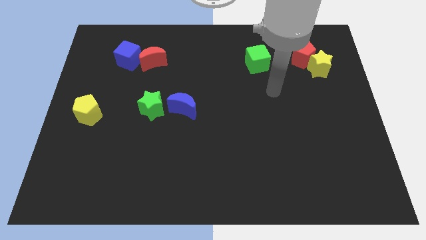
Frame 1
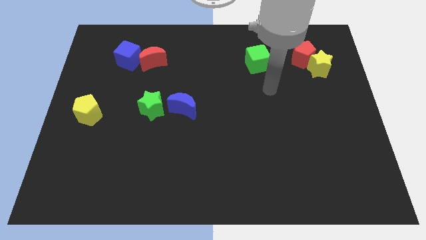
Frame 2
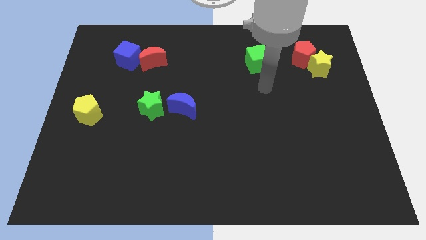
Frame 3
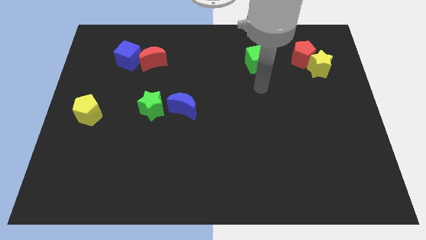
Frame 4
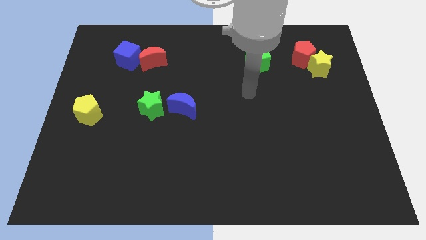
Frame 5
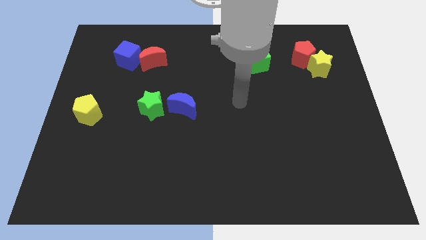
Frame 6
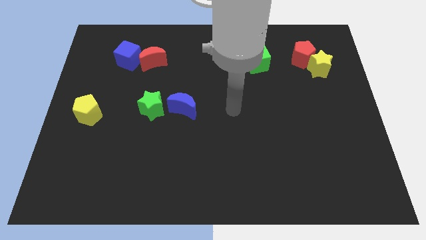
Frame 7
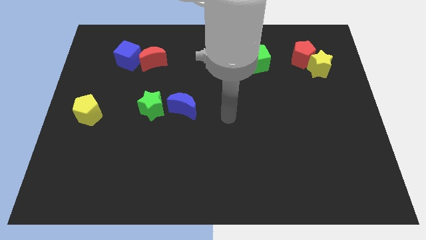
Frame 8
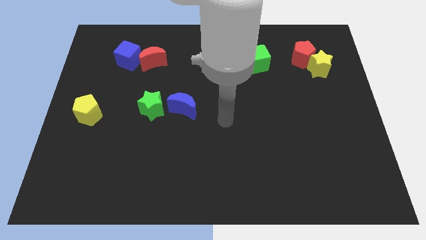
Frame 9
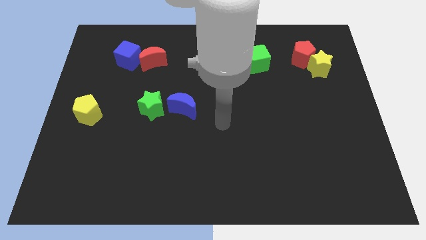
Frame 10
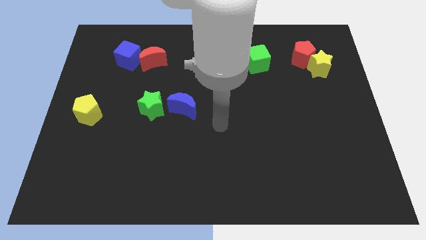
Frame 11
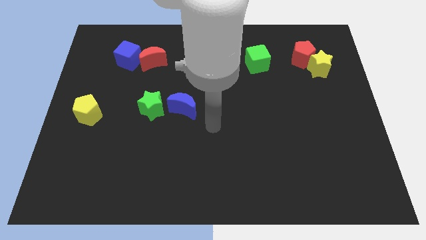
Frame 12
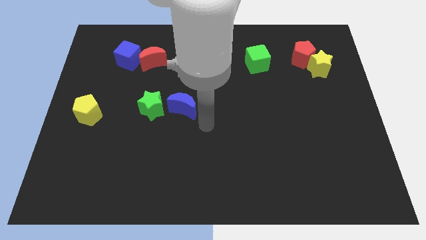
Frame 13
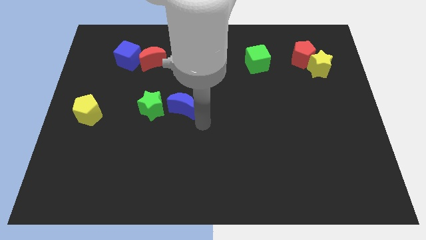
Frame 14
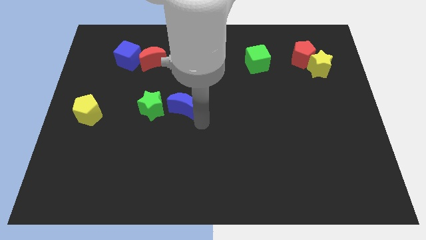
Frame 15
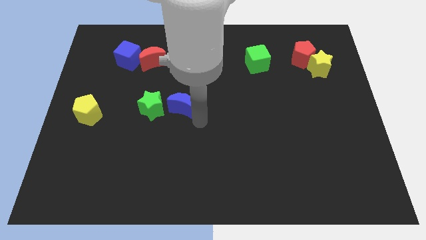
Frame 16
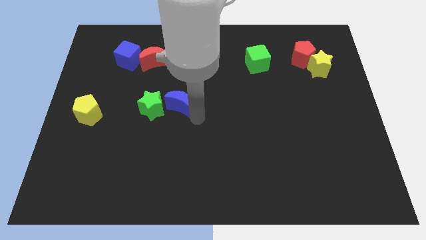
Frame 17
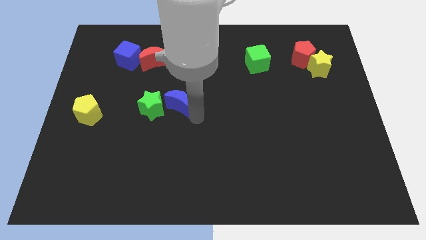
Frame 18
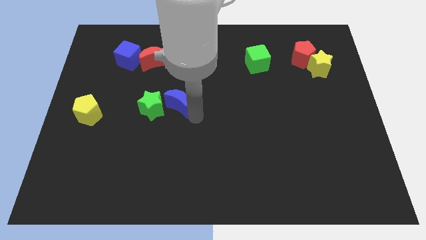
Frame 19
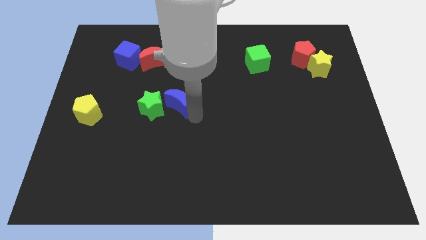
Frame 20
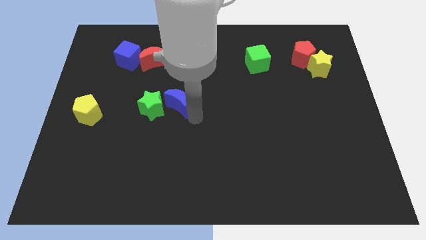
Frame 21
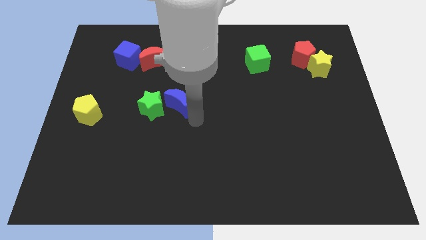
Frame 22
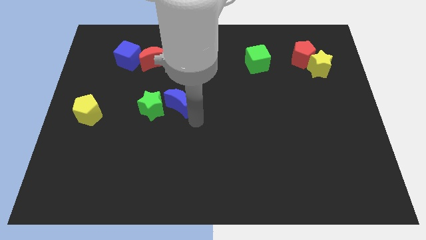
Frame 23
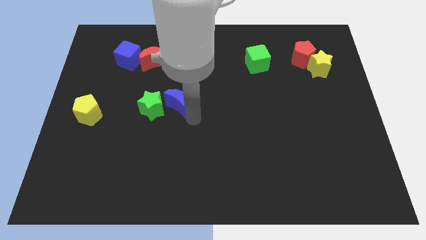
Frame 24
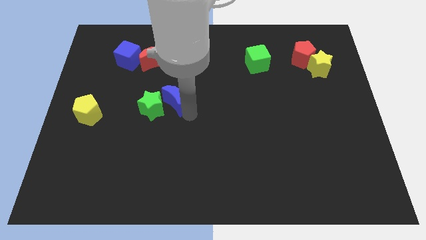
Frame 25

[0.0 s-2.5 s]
touch the bottom of blue crescent

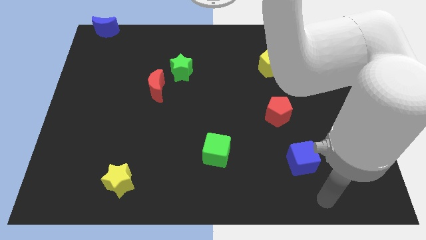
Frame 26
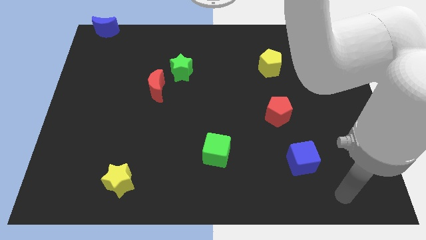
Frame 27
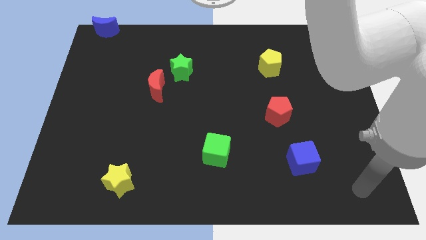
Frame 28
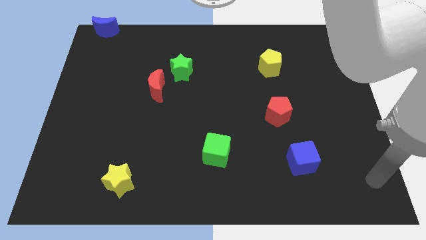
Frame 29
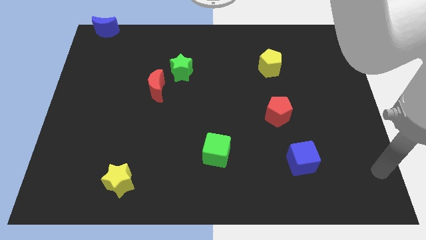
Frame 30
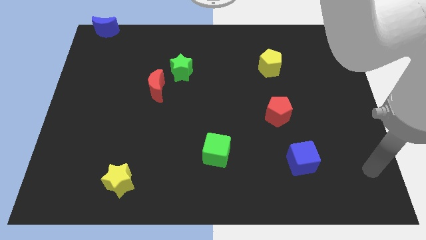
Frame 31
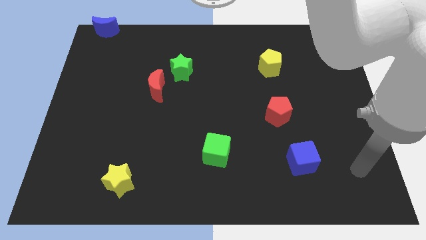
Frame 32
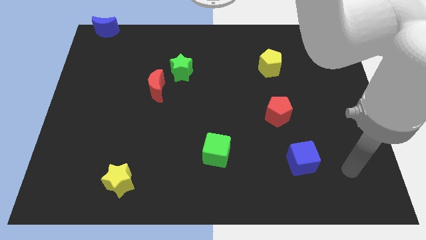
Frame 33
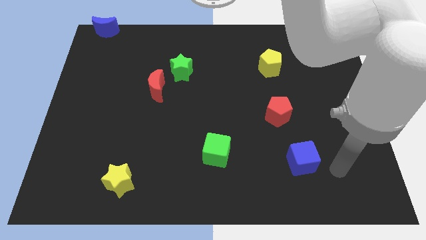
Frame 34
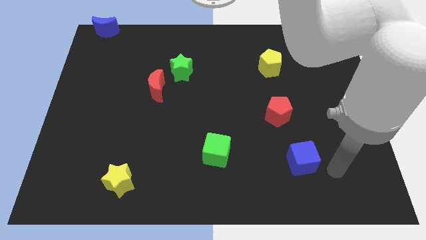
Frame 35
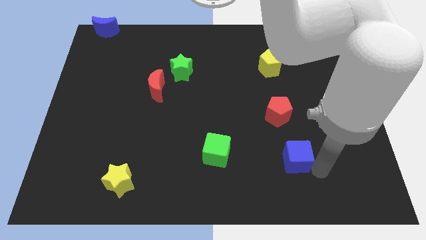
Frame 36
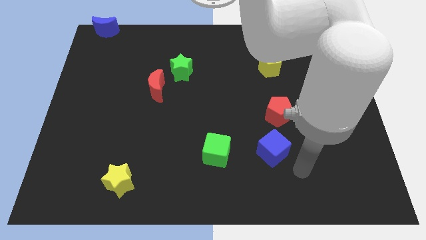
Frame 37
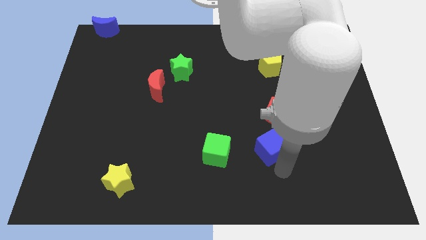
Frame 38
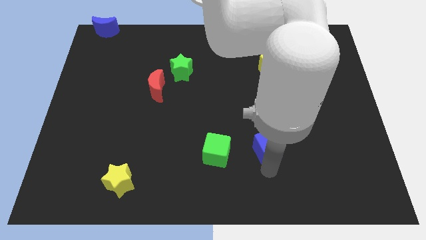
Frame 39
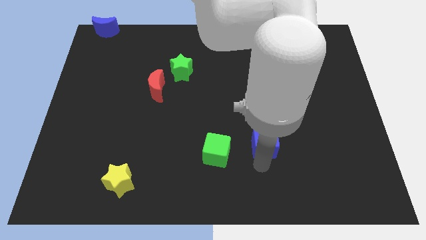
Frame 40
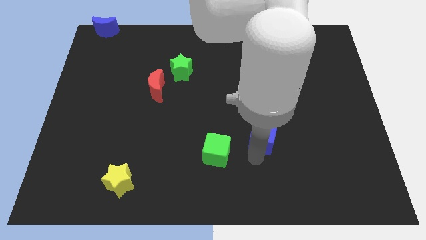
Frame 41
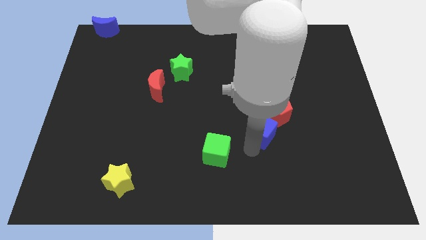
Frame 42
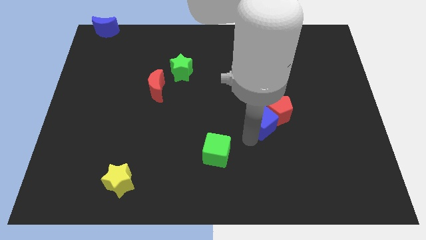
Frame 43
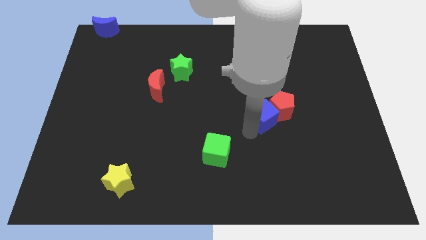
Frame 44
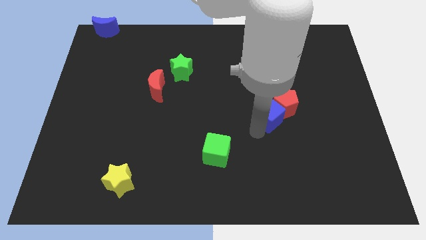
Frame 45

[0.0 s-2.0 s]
push the blue cube into the red pentagon

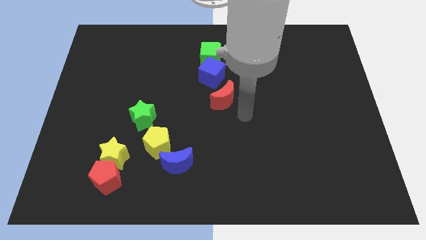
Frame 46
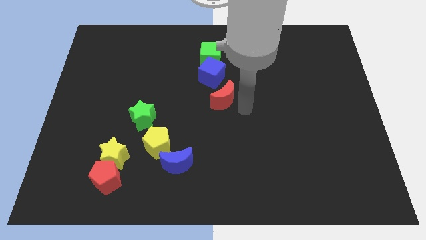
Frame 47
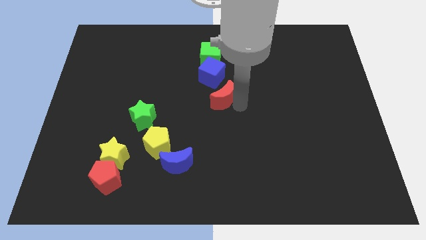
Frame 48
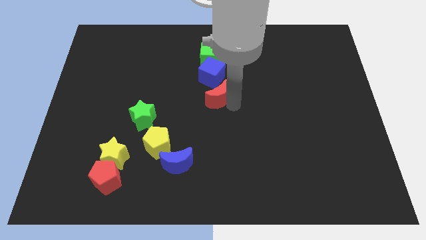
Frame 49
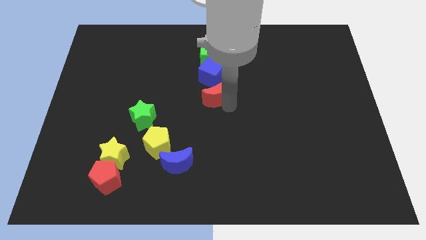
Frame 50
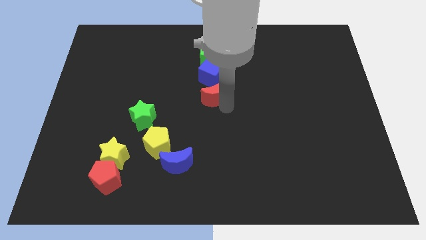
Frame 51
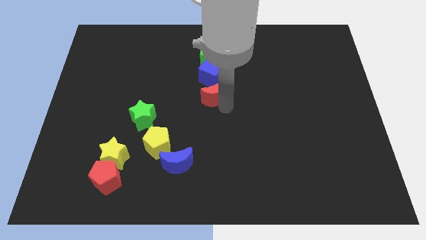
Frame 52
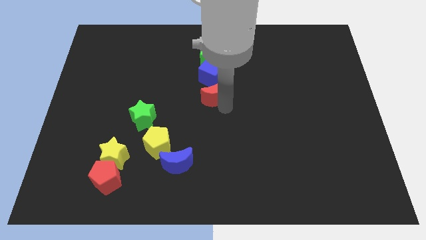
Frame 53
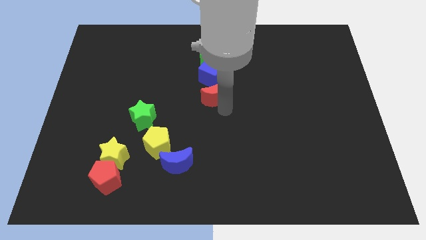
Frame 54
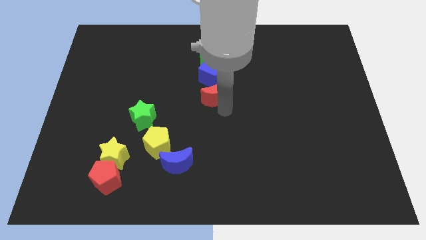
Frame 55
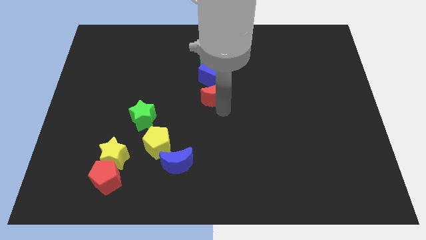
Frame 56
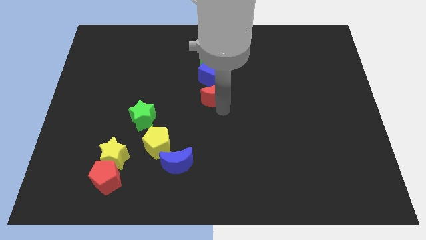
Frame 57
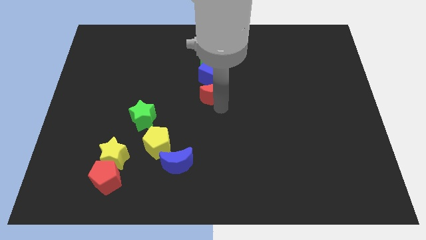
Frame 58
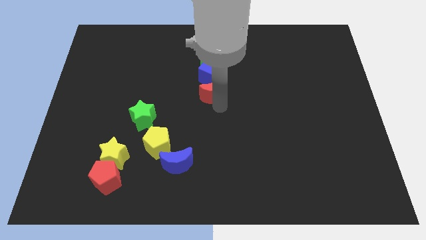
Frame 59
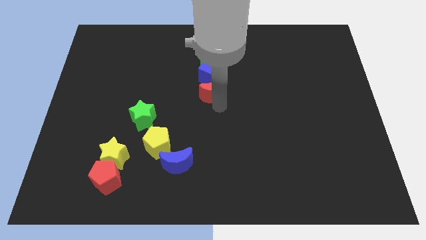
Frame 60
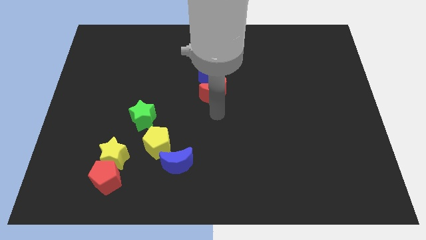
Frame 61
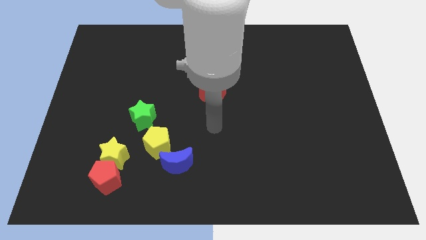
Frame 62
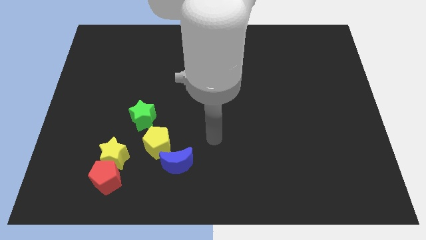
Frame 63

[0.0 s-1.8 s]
push the red crescent into blue cube

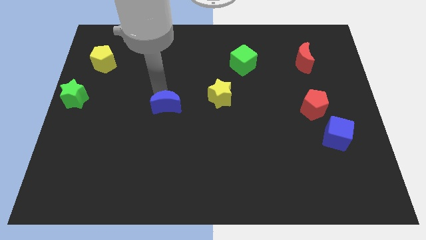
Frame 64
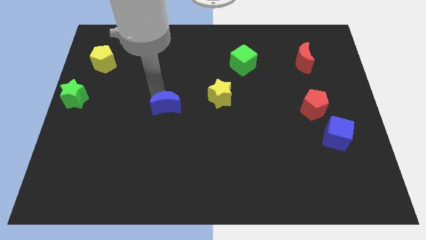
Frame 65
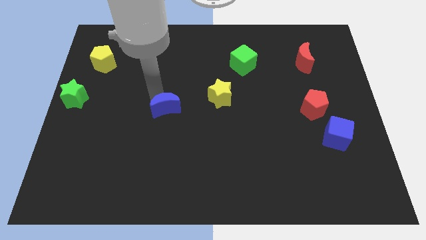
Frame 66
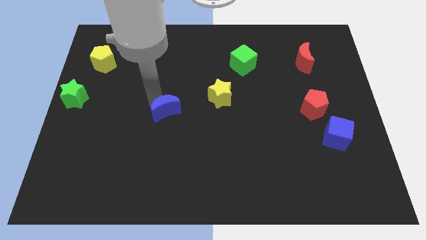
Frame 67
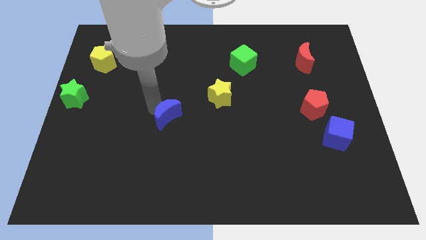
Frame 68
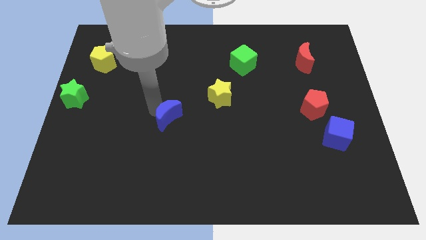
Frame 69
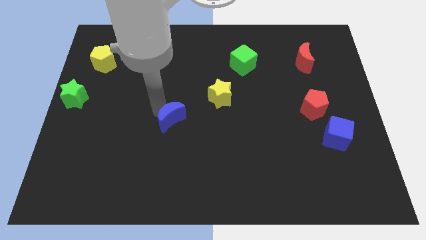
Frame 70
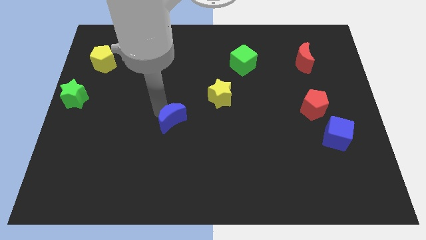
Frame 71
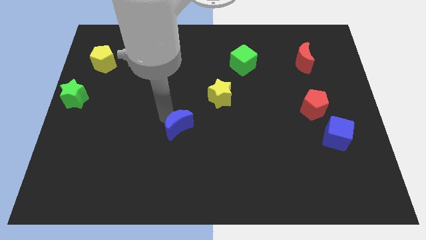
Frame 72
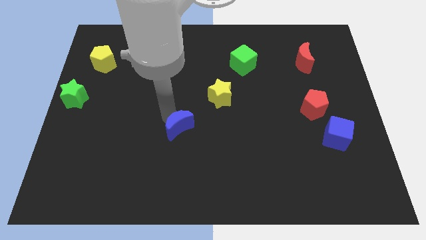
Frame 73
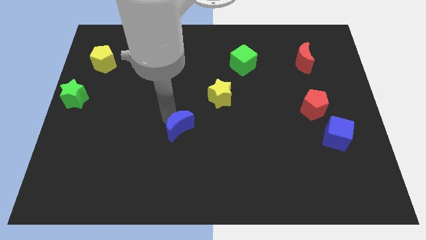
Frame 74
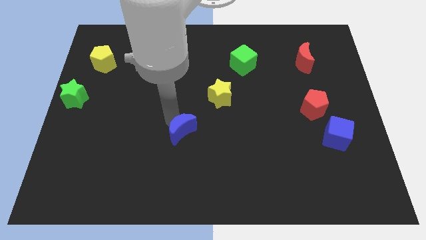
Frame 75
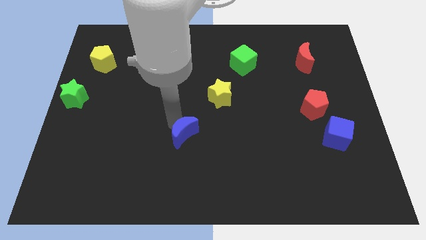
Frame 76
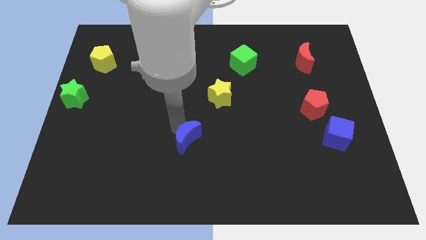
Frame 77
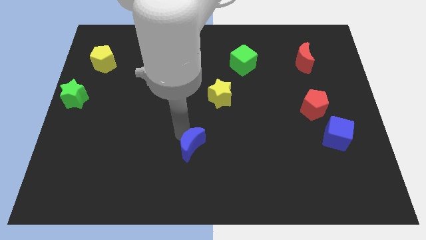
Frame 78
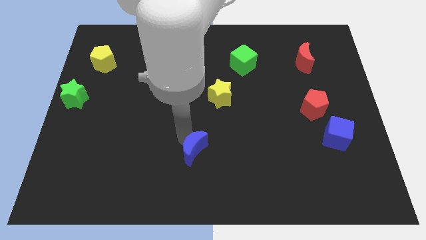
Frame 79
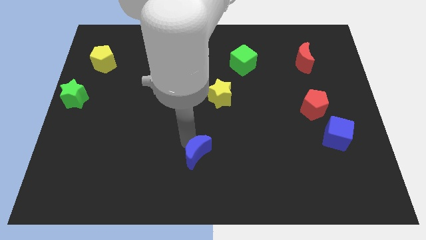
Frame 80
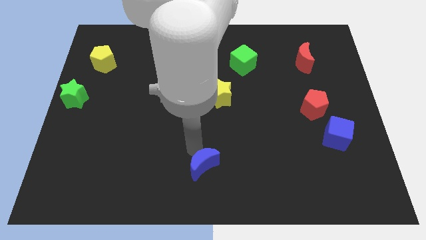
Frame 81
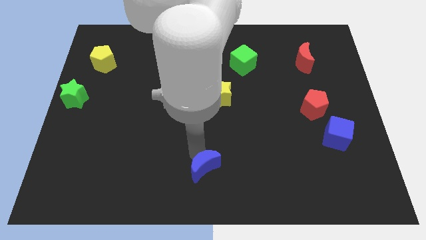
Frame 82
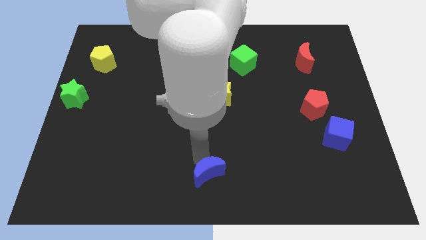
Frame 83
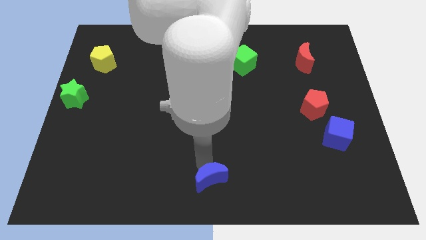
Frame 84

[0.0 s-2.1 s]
place the blue moon below the yellow star

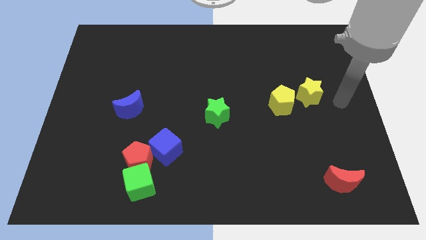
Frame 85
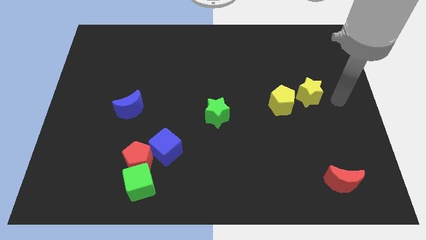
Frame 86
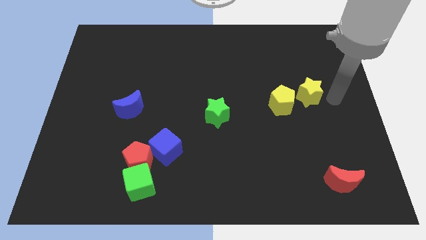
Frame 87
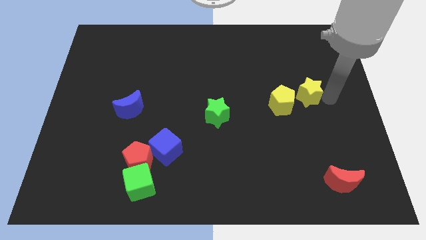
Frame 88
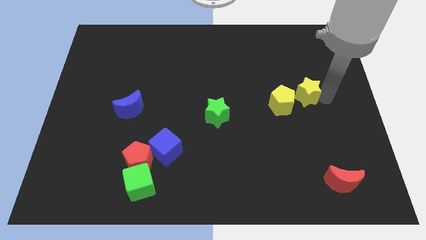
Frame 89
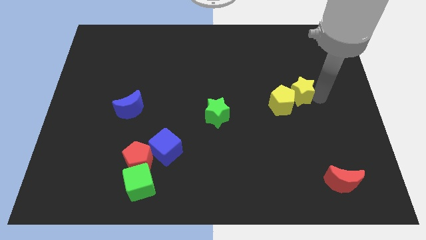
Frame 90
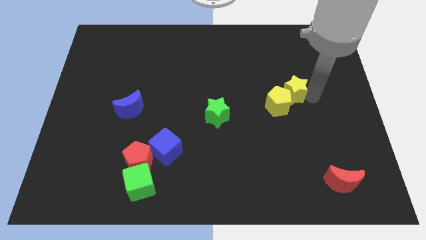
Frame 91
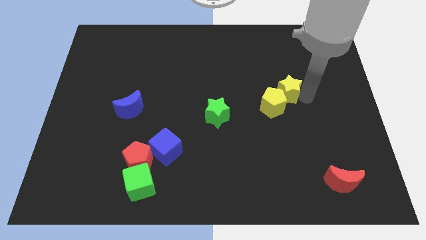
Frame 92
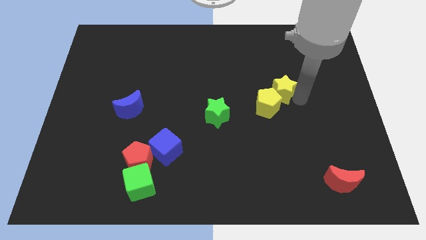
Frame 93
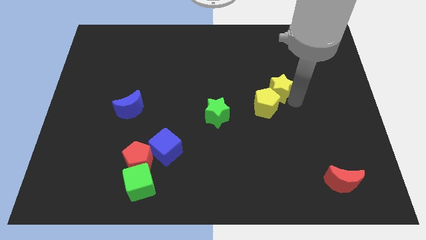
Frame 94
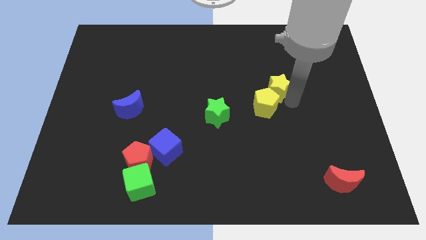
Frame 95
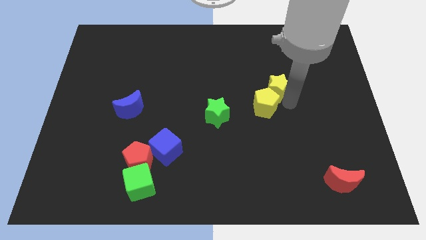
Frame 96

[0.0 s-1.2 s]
push the yellow star into yellow pentagon
